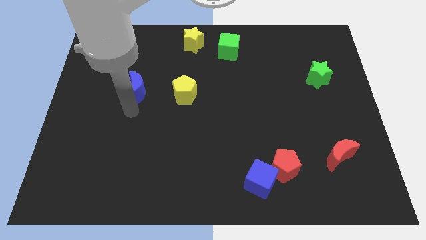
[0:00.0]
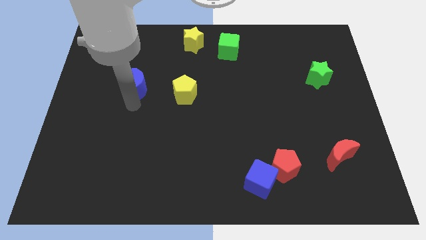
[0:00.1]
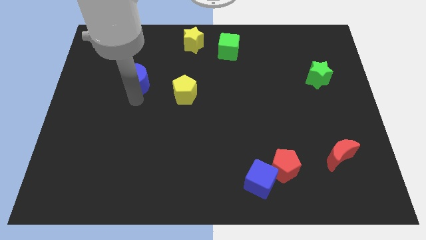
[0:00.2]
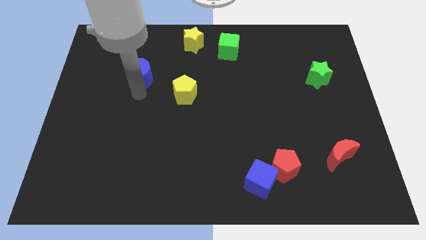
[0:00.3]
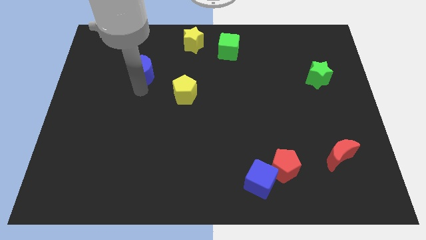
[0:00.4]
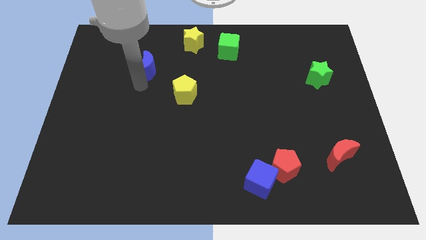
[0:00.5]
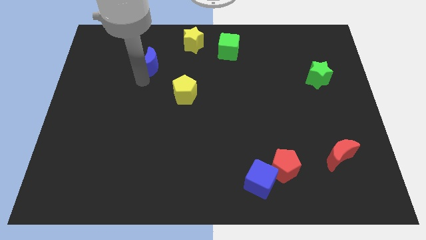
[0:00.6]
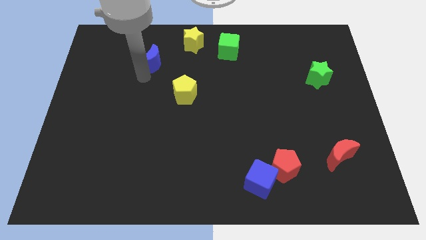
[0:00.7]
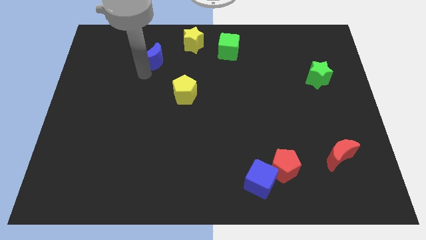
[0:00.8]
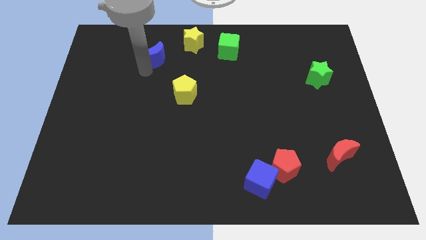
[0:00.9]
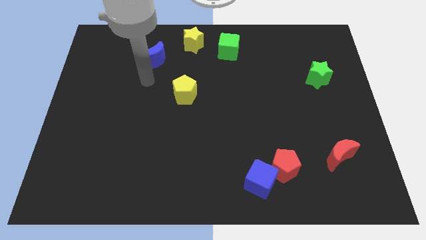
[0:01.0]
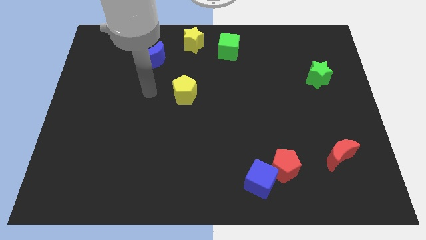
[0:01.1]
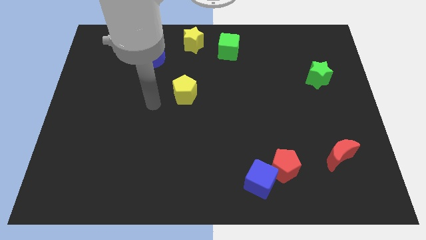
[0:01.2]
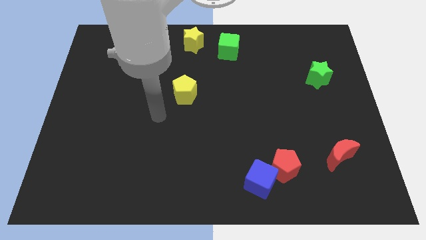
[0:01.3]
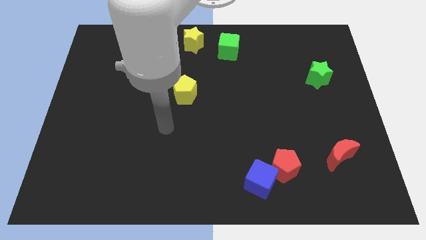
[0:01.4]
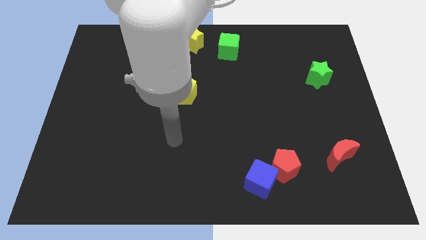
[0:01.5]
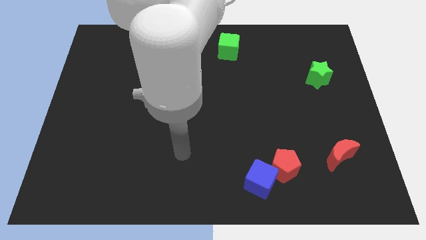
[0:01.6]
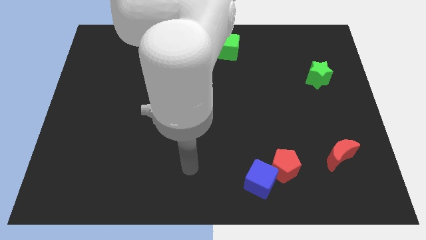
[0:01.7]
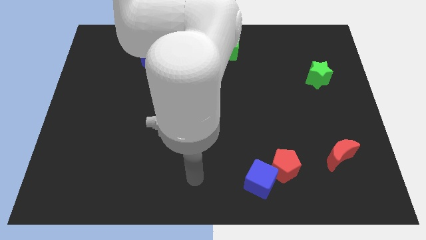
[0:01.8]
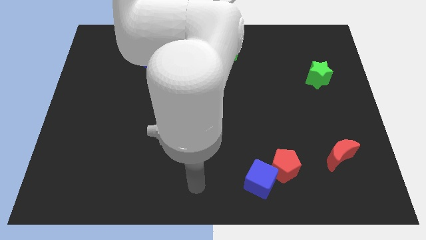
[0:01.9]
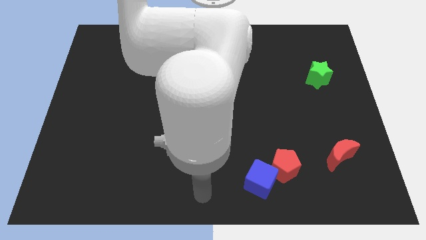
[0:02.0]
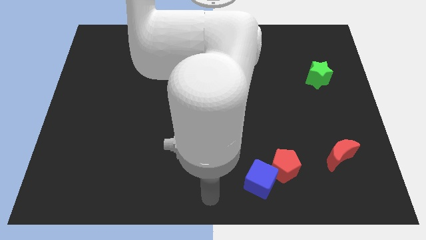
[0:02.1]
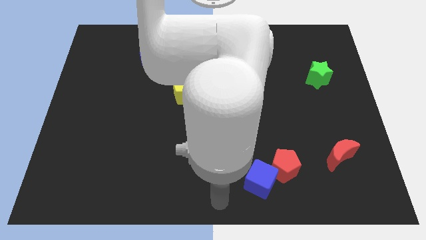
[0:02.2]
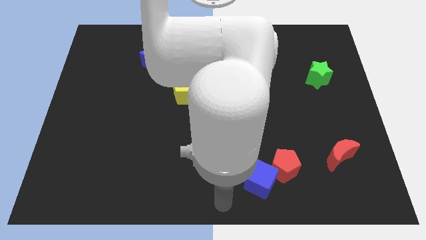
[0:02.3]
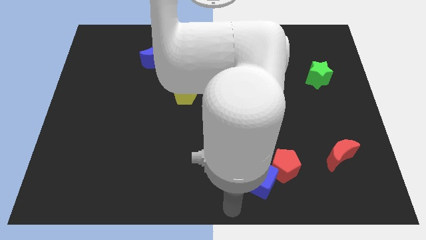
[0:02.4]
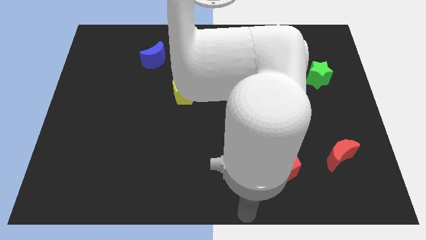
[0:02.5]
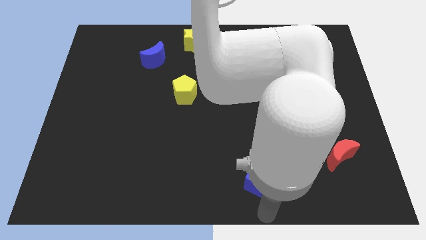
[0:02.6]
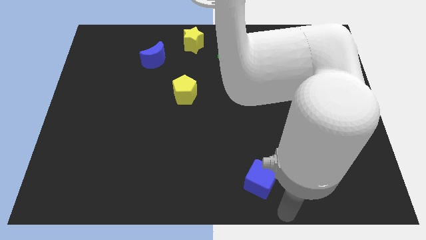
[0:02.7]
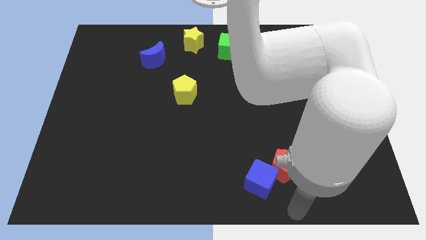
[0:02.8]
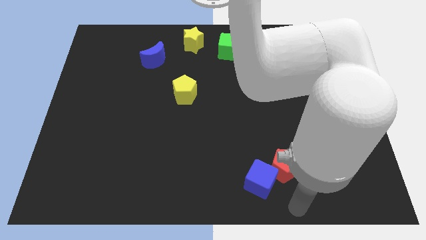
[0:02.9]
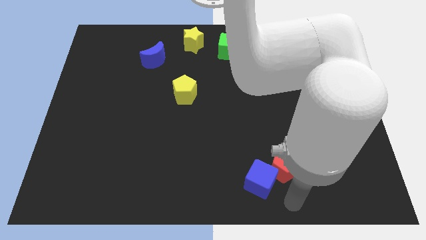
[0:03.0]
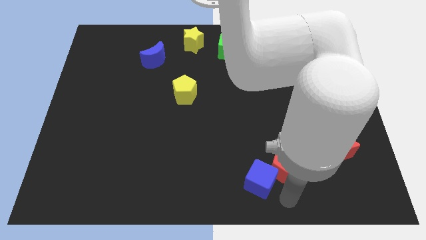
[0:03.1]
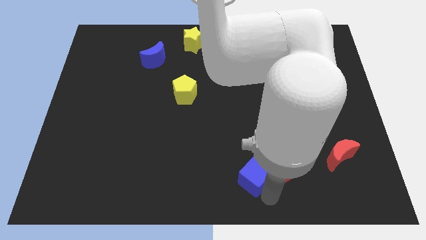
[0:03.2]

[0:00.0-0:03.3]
move the arm below the blue cube

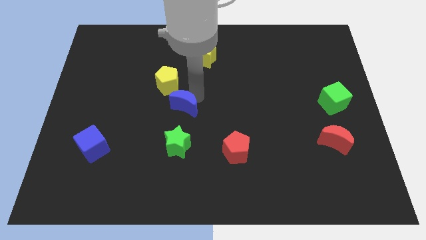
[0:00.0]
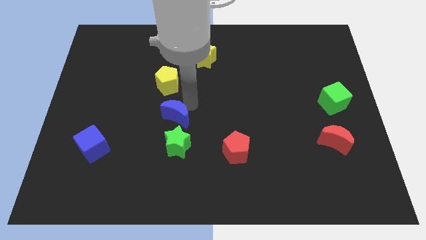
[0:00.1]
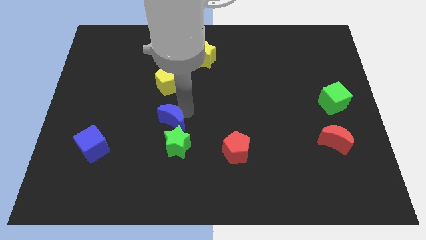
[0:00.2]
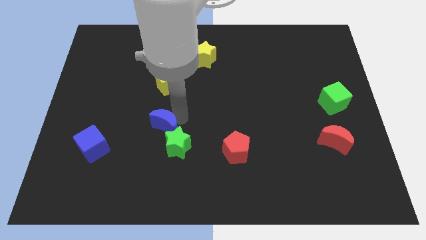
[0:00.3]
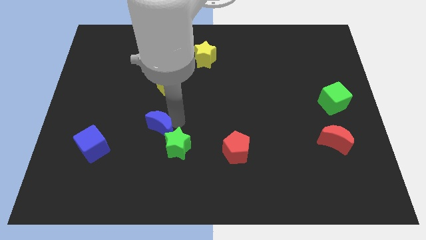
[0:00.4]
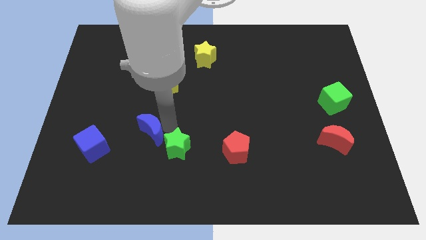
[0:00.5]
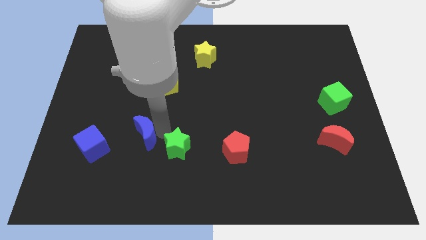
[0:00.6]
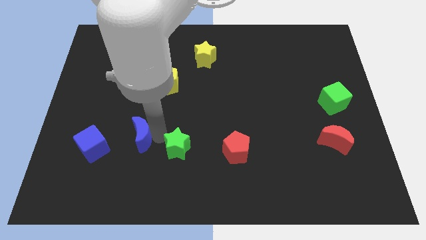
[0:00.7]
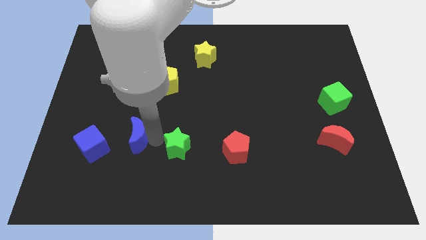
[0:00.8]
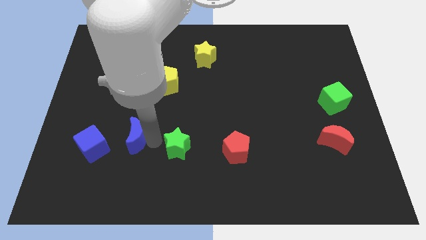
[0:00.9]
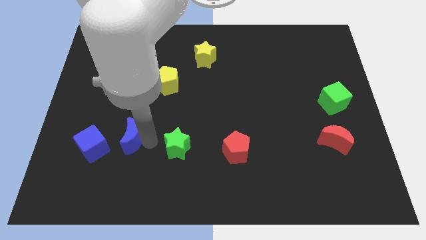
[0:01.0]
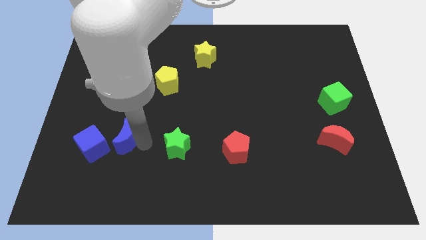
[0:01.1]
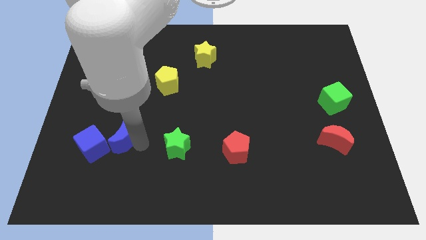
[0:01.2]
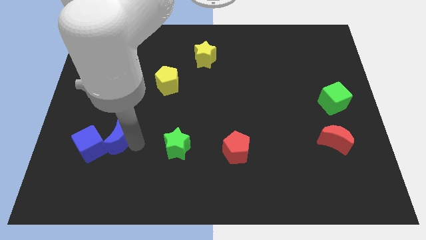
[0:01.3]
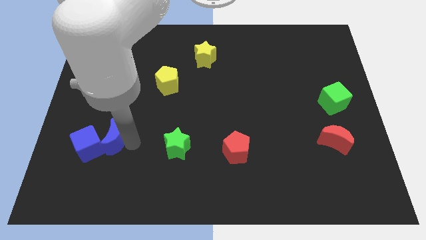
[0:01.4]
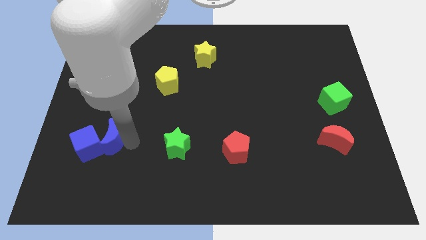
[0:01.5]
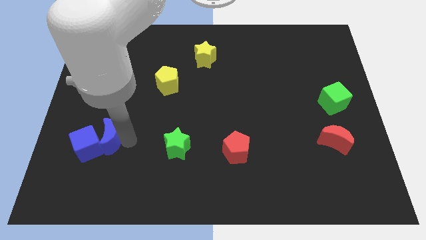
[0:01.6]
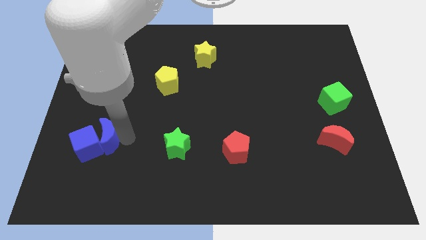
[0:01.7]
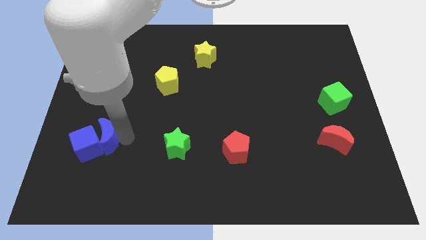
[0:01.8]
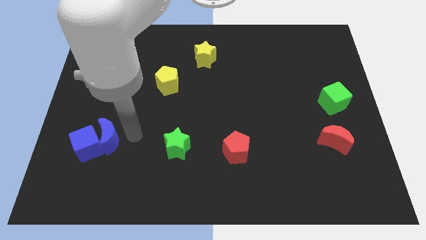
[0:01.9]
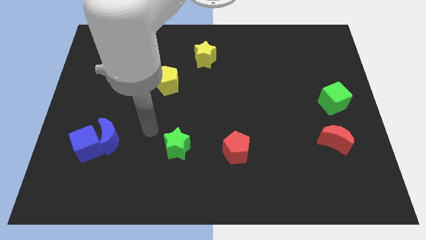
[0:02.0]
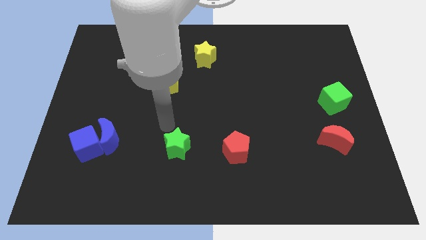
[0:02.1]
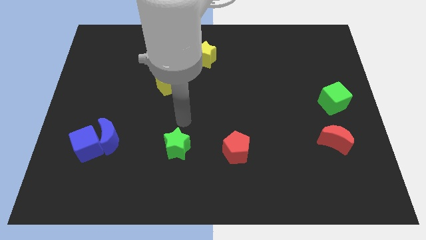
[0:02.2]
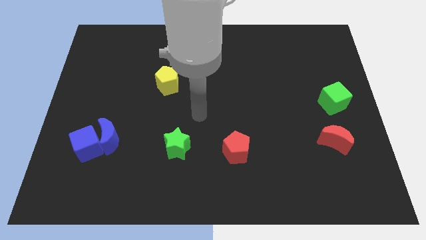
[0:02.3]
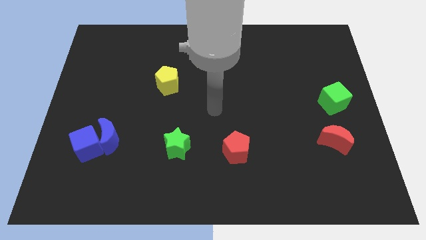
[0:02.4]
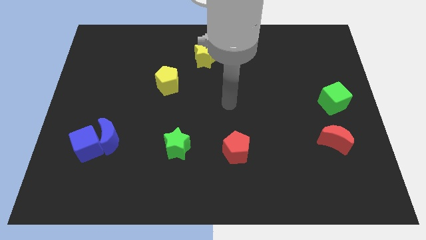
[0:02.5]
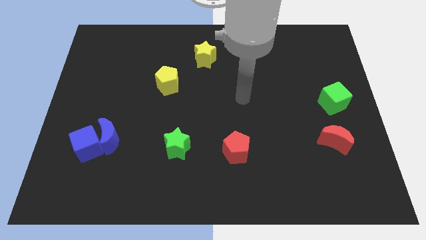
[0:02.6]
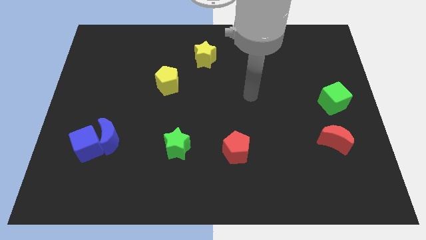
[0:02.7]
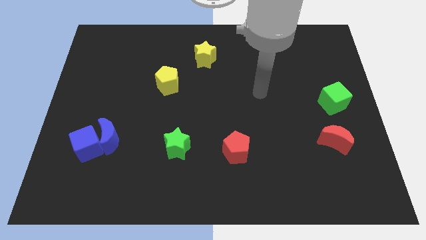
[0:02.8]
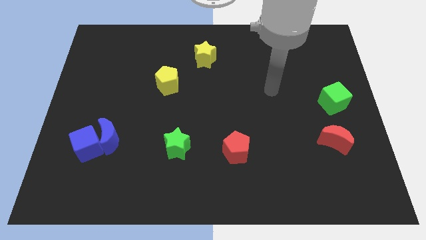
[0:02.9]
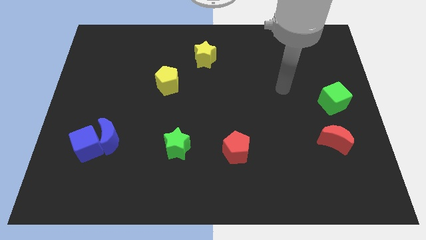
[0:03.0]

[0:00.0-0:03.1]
push the blue moon into blue cube

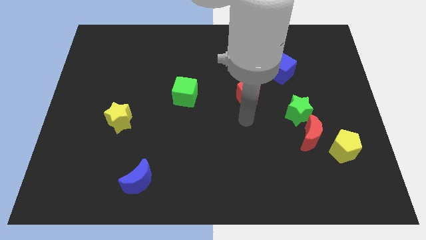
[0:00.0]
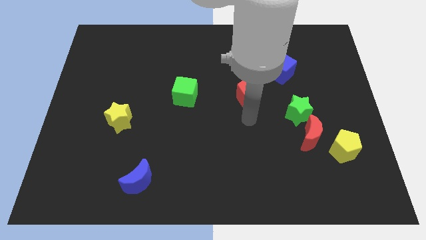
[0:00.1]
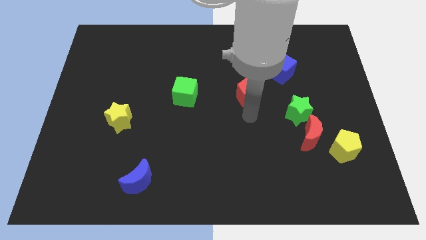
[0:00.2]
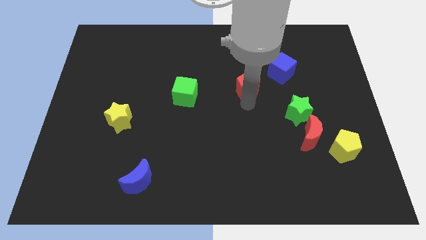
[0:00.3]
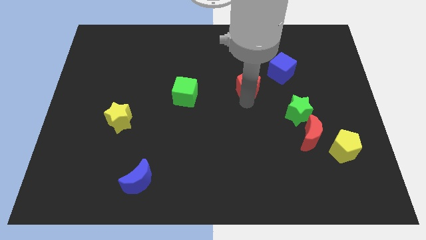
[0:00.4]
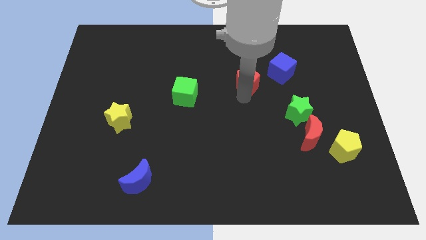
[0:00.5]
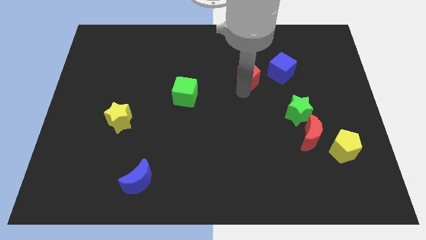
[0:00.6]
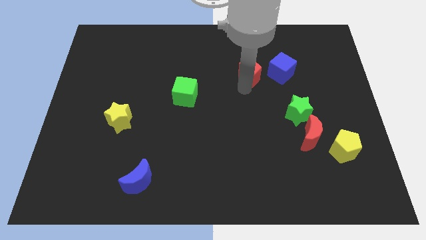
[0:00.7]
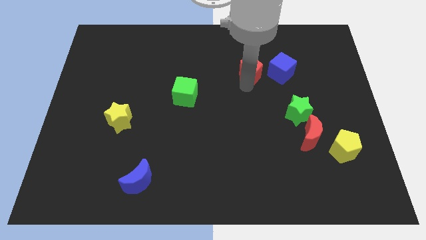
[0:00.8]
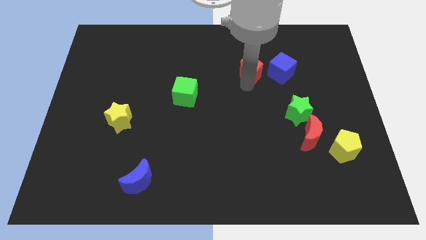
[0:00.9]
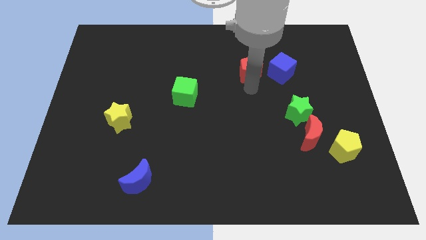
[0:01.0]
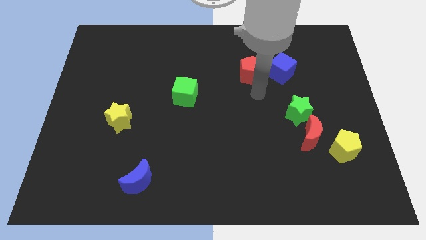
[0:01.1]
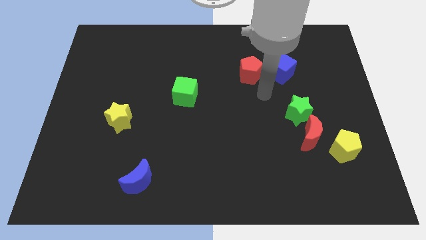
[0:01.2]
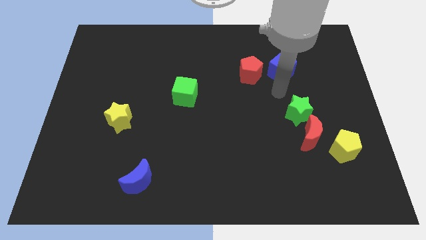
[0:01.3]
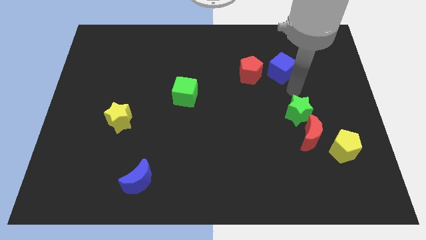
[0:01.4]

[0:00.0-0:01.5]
place the red pentagon left to the blue cube

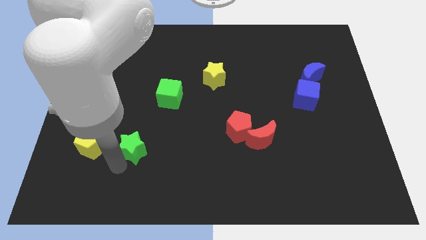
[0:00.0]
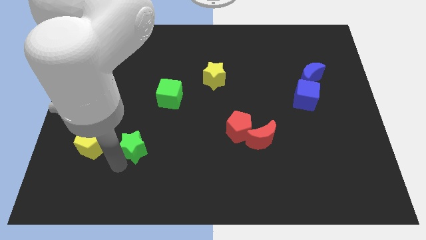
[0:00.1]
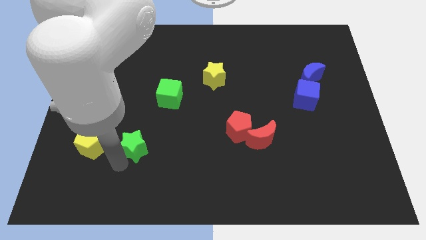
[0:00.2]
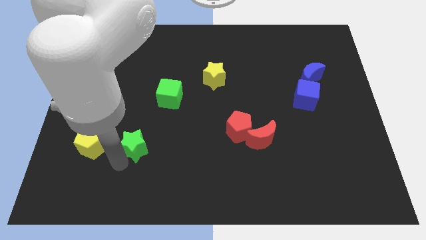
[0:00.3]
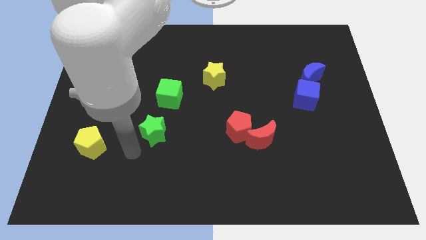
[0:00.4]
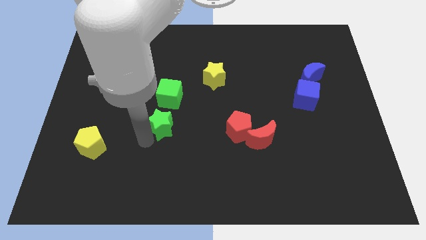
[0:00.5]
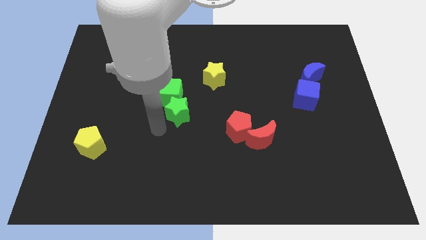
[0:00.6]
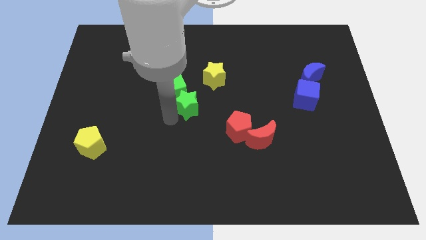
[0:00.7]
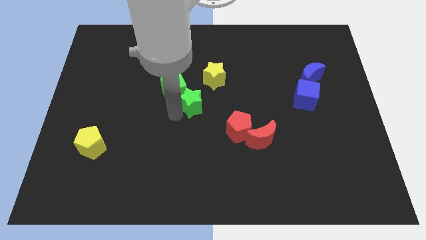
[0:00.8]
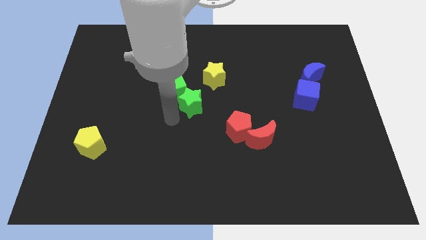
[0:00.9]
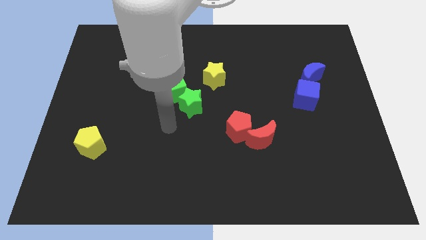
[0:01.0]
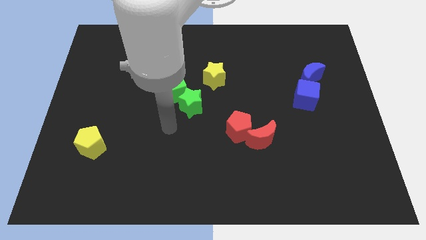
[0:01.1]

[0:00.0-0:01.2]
push the green star to the bottom right of the green cube
